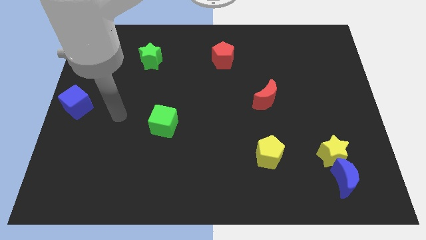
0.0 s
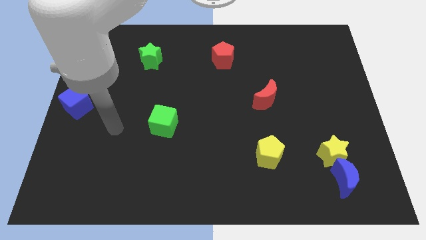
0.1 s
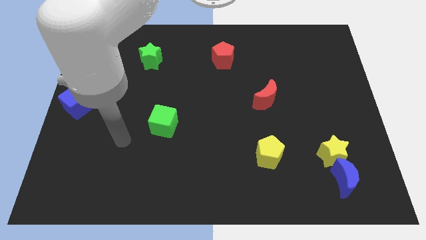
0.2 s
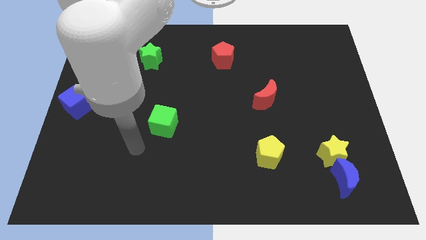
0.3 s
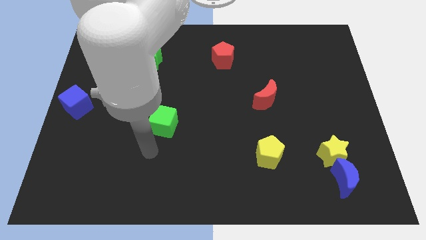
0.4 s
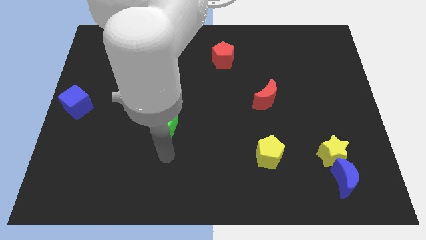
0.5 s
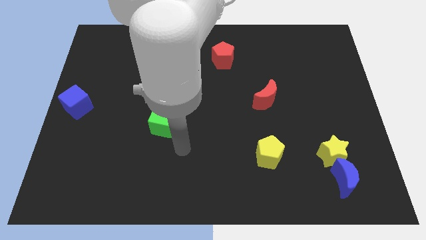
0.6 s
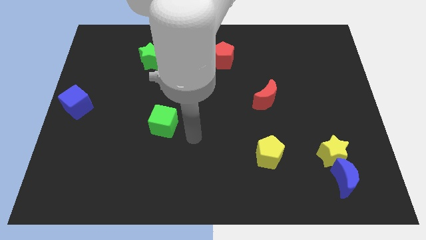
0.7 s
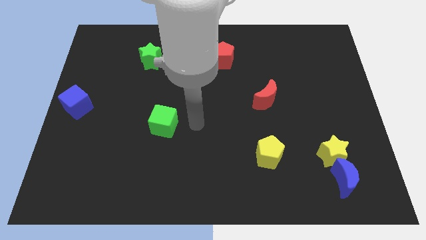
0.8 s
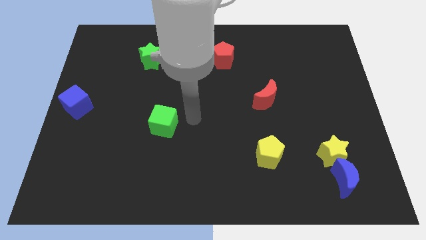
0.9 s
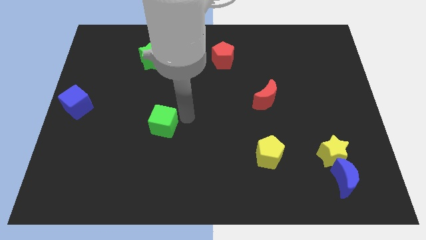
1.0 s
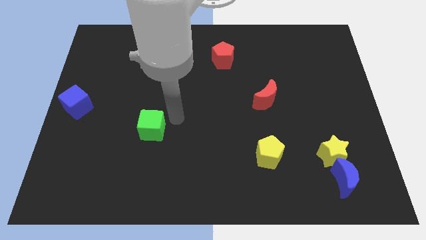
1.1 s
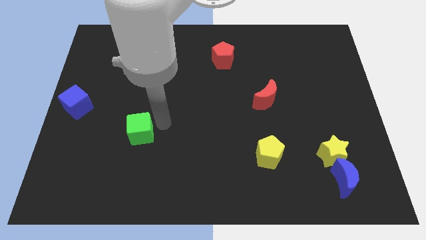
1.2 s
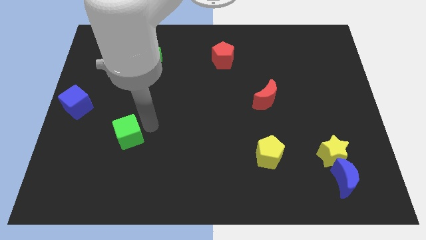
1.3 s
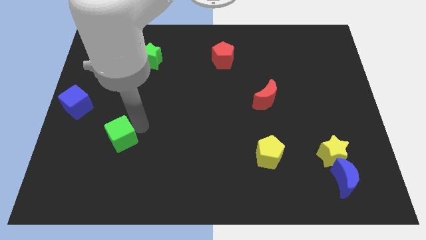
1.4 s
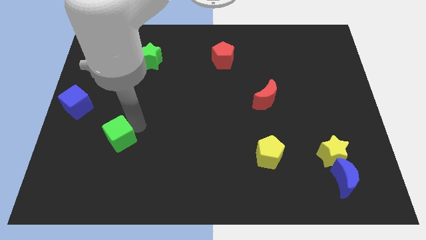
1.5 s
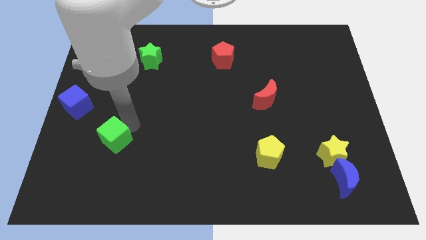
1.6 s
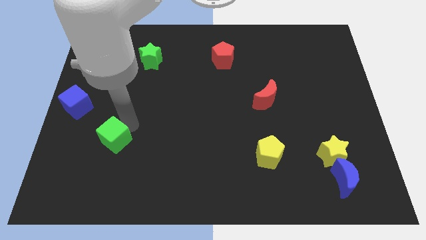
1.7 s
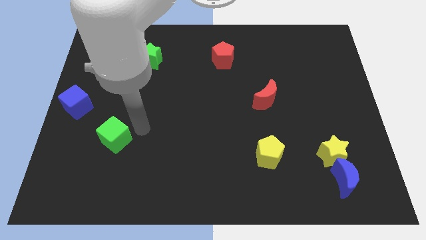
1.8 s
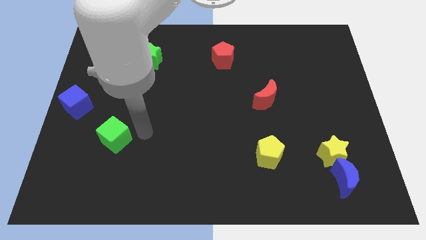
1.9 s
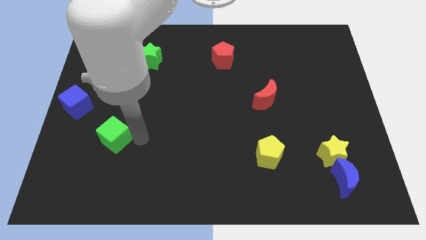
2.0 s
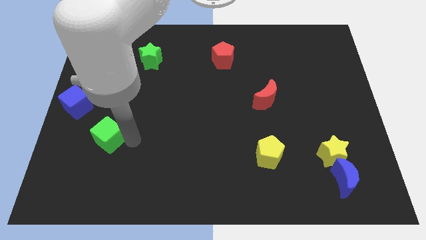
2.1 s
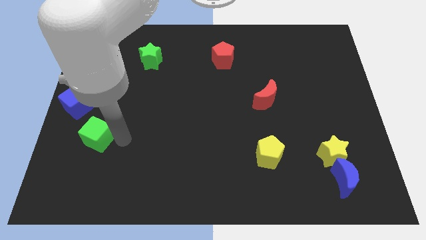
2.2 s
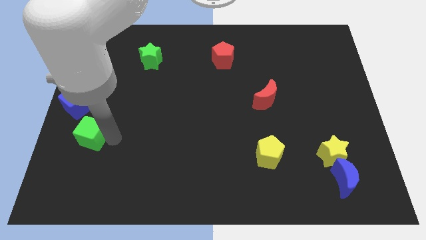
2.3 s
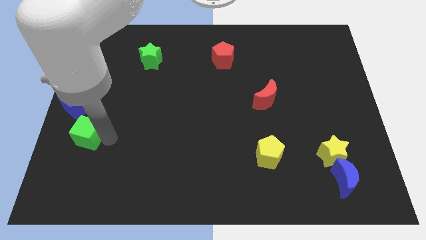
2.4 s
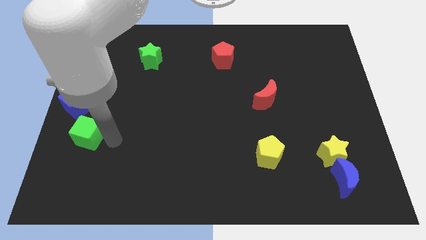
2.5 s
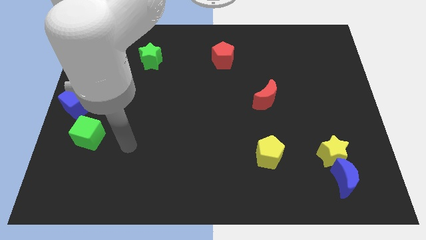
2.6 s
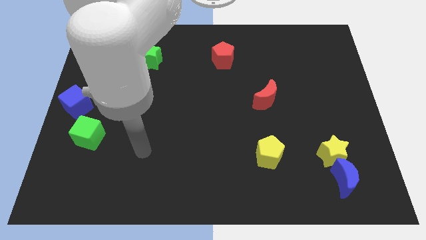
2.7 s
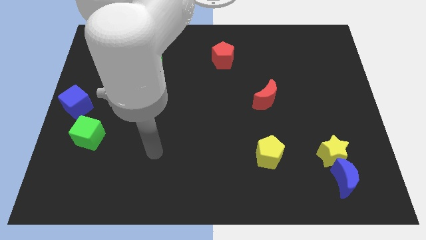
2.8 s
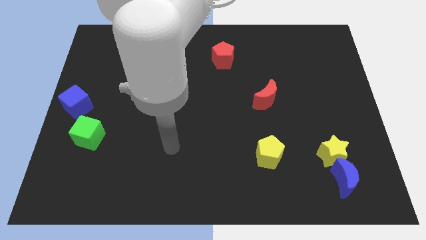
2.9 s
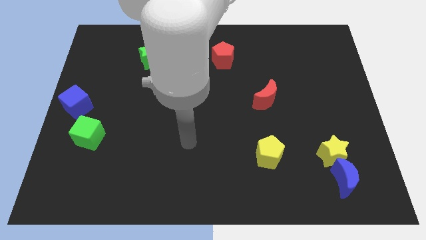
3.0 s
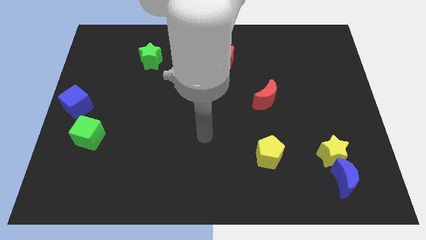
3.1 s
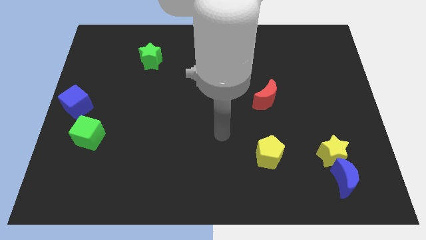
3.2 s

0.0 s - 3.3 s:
place the green cube to the bottom right side of the blue cube

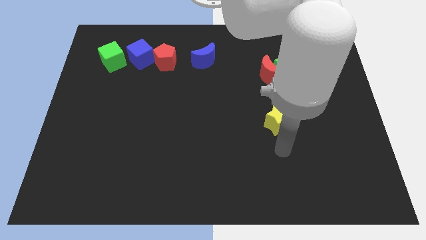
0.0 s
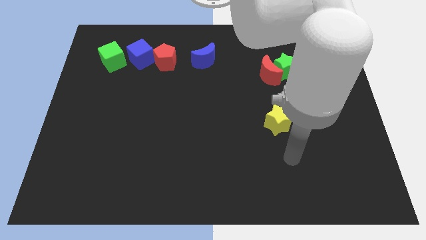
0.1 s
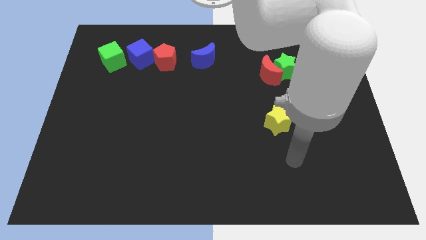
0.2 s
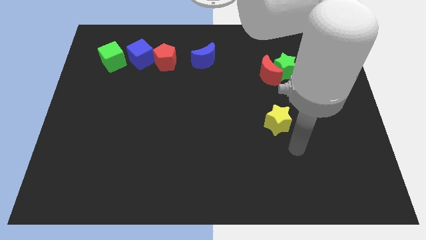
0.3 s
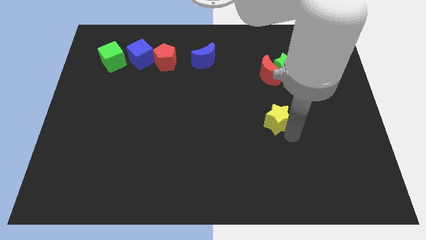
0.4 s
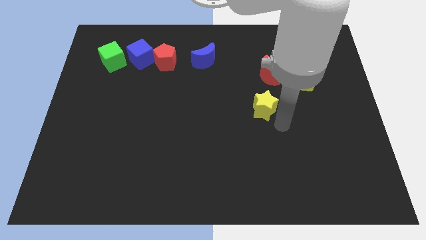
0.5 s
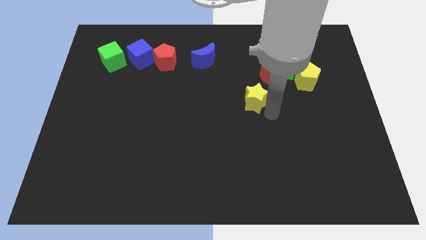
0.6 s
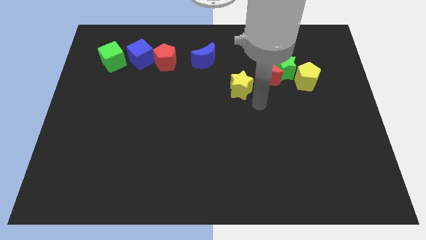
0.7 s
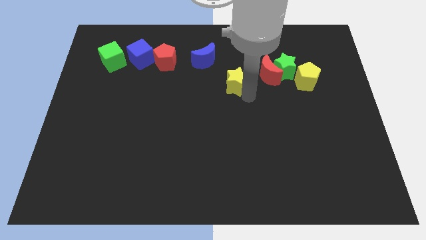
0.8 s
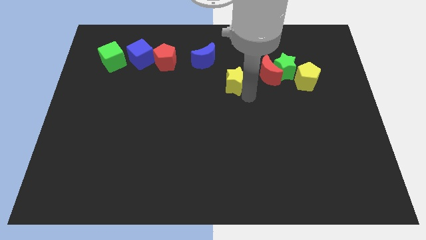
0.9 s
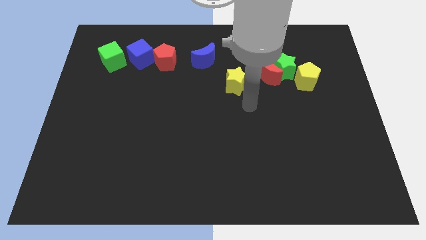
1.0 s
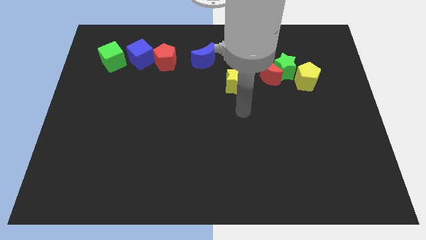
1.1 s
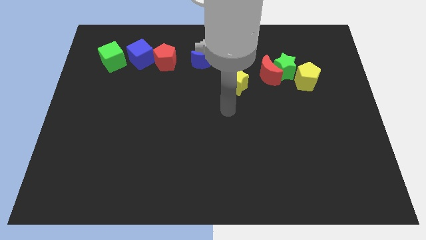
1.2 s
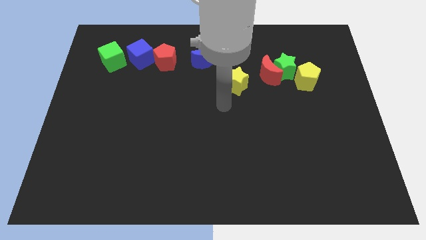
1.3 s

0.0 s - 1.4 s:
place the yellow star to the left of red moon

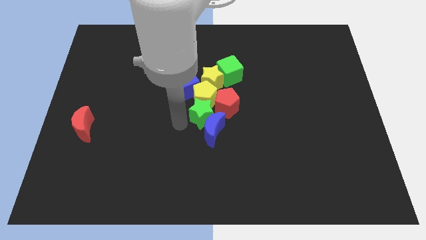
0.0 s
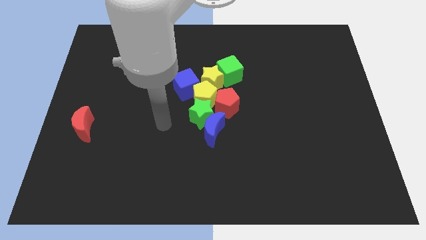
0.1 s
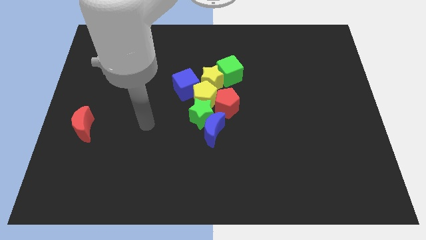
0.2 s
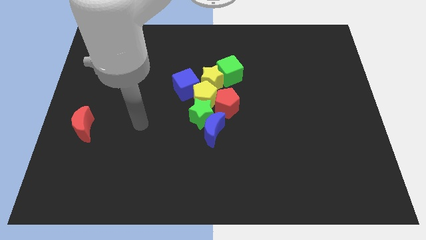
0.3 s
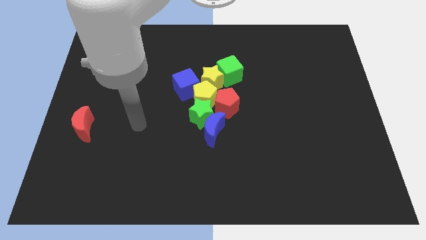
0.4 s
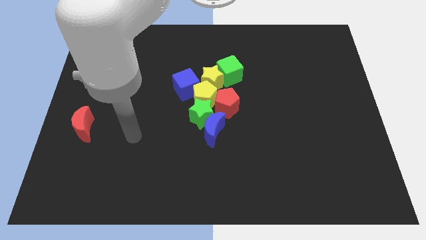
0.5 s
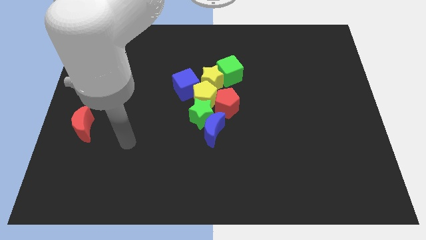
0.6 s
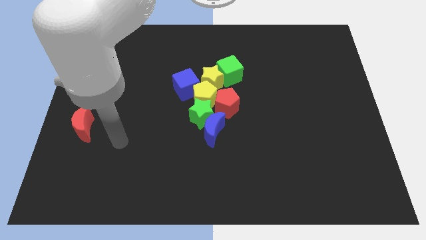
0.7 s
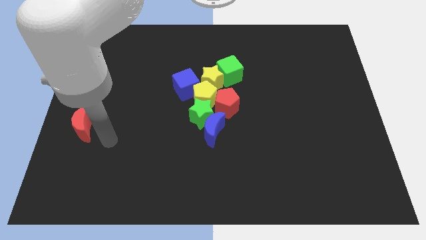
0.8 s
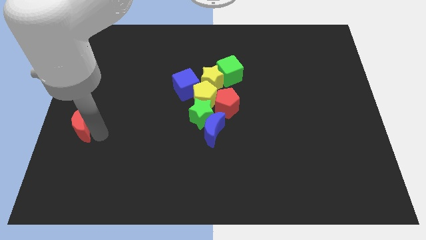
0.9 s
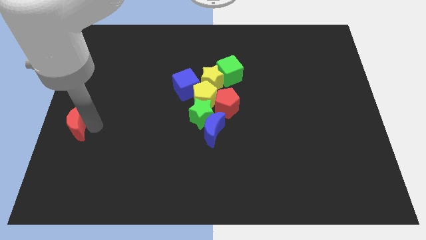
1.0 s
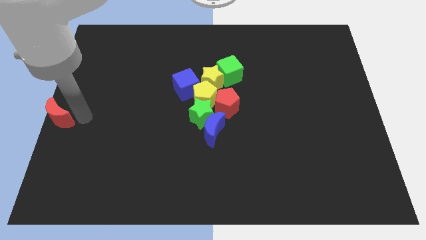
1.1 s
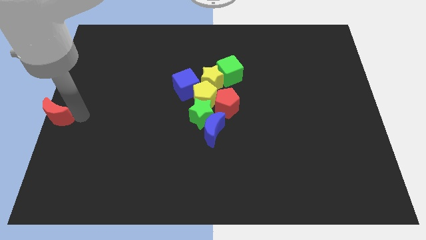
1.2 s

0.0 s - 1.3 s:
move the red crescent to the left center of the board

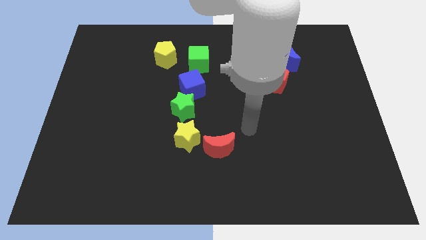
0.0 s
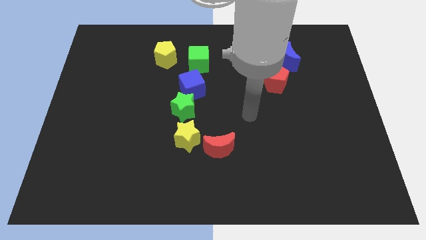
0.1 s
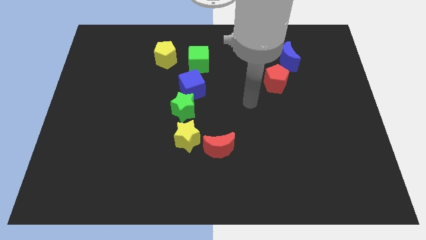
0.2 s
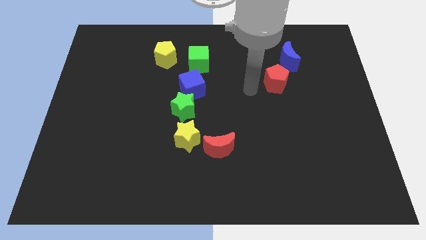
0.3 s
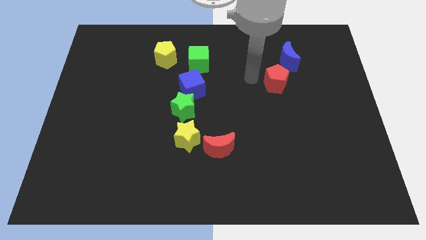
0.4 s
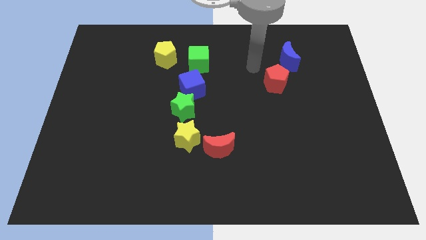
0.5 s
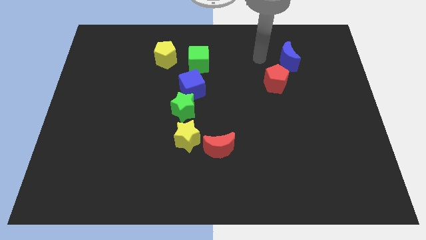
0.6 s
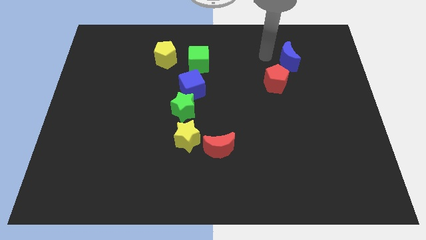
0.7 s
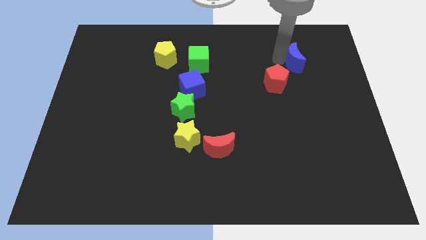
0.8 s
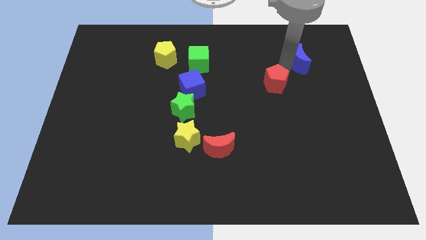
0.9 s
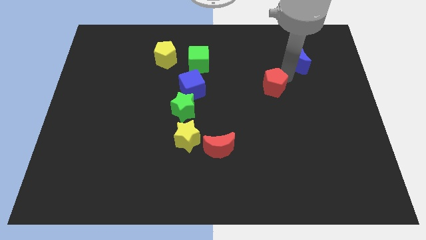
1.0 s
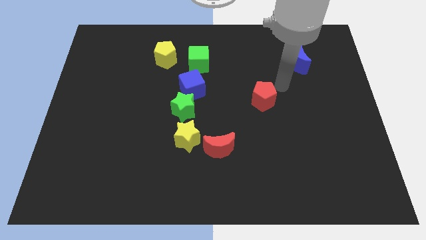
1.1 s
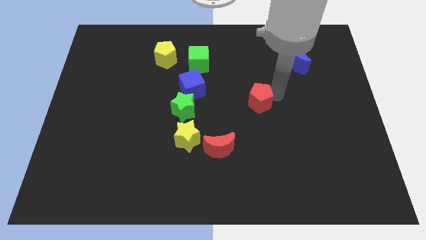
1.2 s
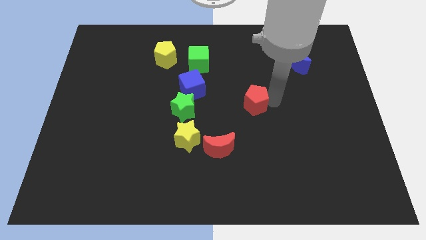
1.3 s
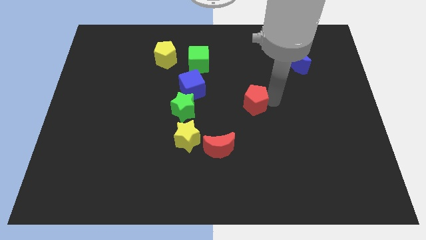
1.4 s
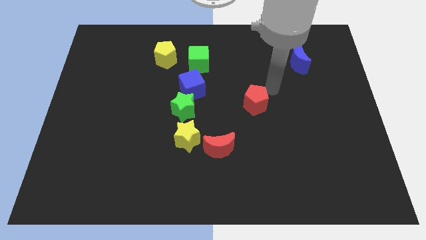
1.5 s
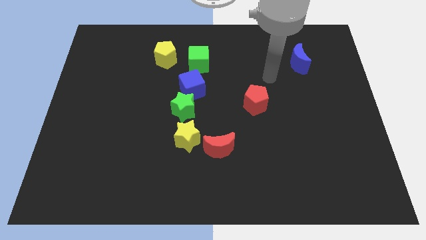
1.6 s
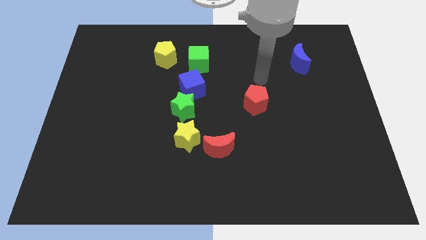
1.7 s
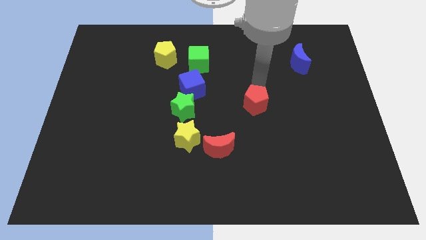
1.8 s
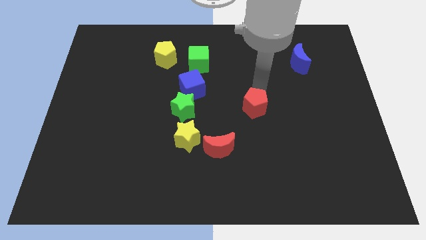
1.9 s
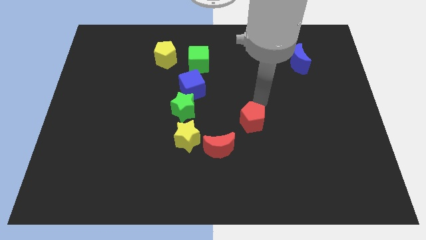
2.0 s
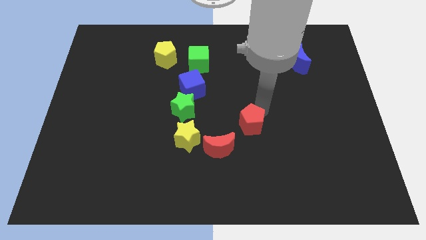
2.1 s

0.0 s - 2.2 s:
drag the red pentagon to the top right the red moon

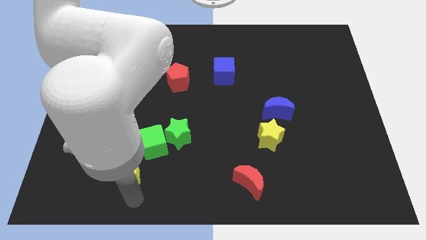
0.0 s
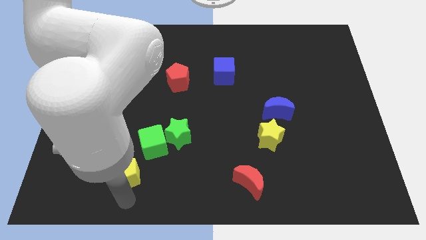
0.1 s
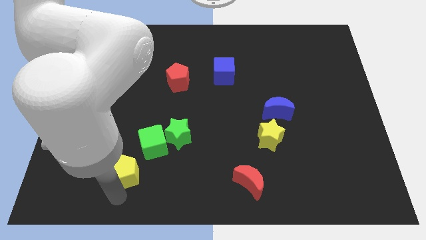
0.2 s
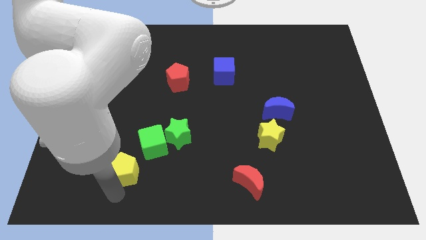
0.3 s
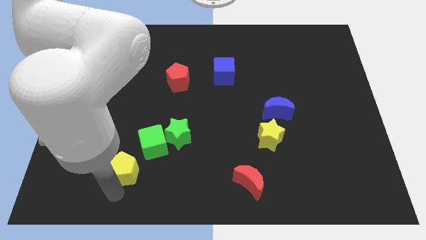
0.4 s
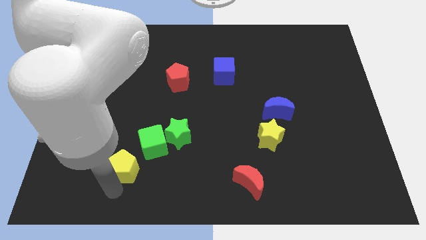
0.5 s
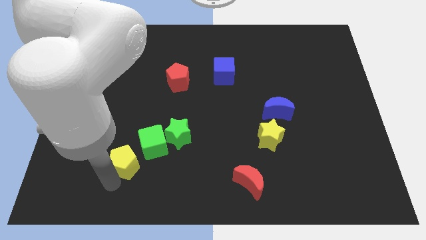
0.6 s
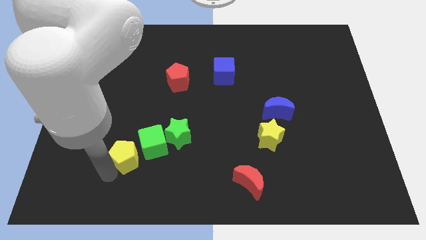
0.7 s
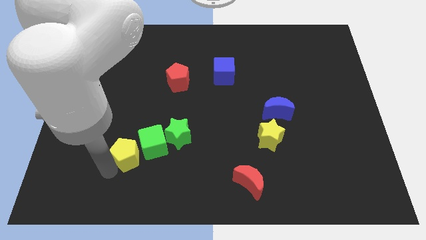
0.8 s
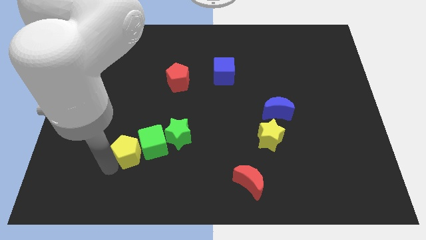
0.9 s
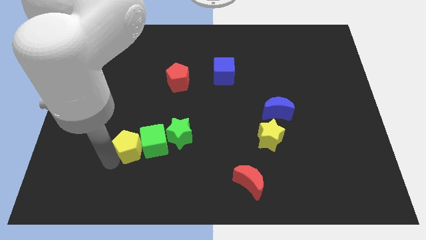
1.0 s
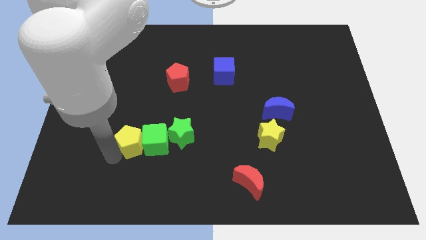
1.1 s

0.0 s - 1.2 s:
place yellow pentagon left to the green cube
